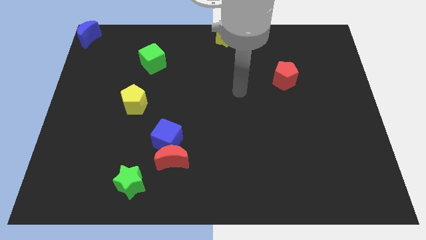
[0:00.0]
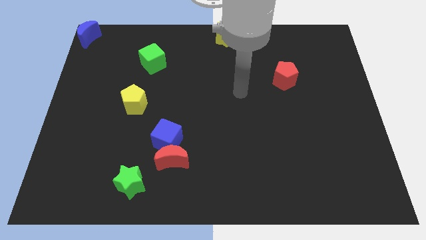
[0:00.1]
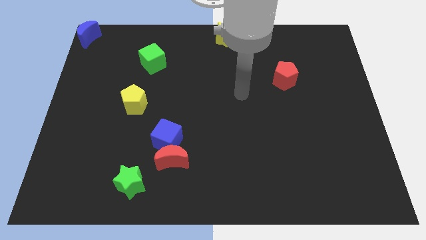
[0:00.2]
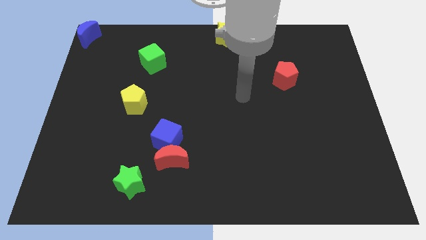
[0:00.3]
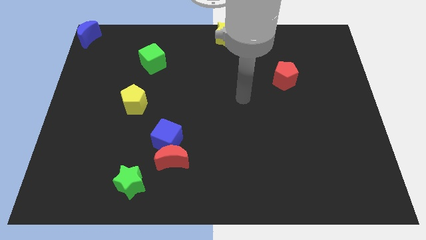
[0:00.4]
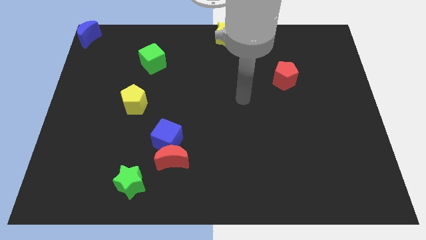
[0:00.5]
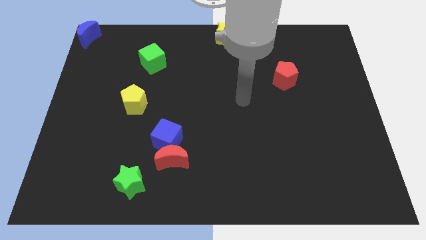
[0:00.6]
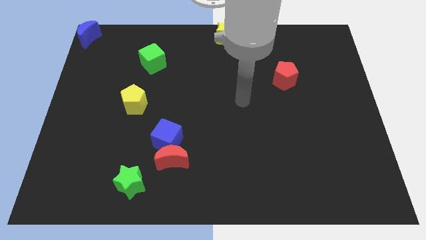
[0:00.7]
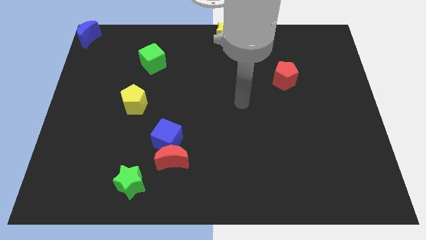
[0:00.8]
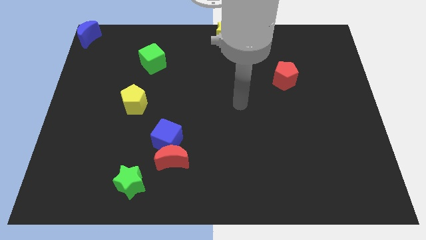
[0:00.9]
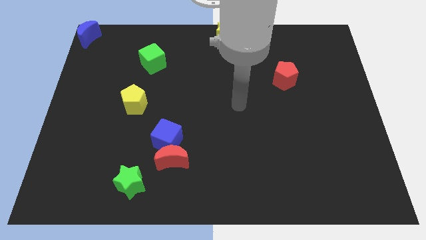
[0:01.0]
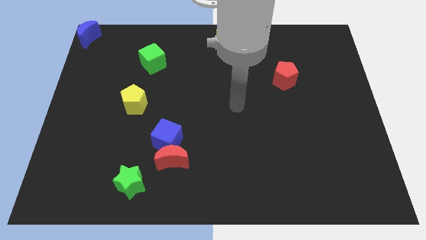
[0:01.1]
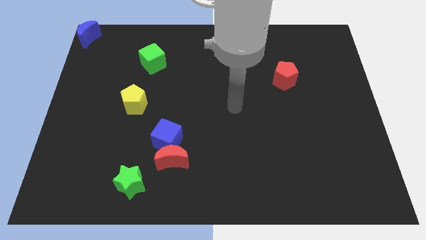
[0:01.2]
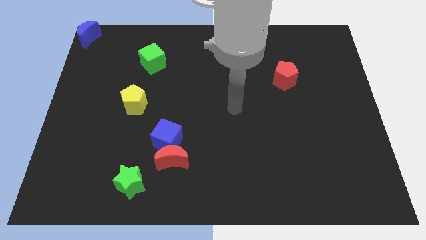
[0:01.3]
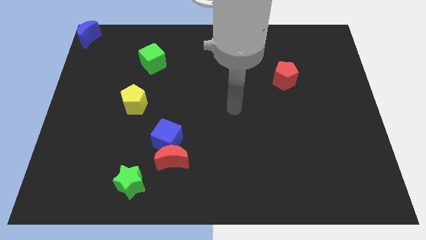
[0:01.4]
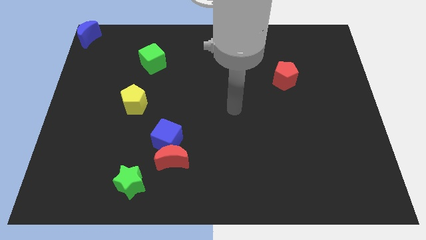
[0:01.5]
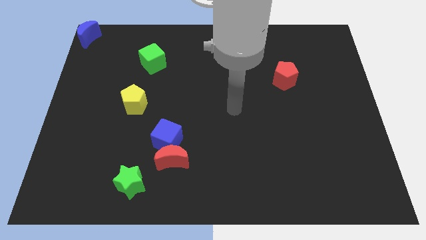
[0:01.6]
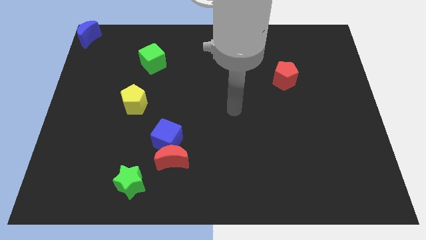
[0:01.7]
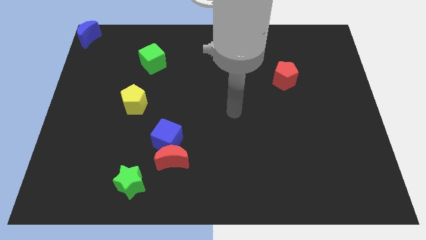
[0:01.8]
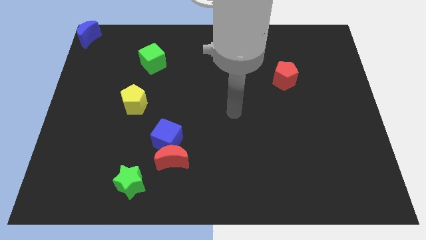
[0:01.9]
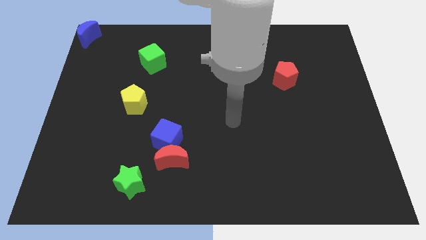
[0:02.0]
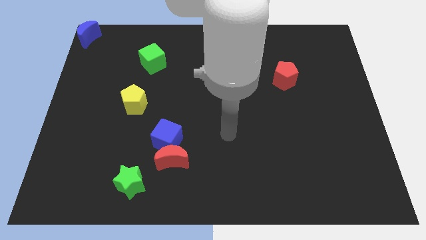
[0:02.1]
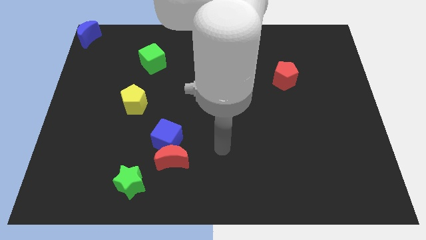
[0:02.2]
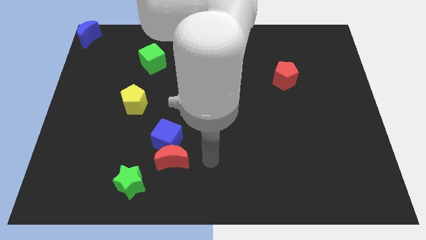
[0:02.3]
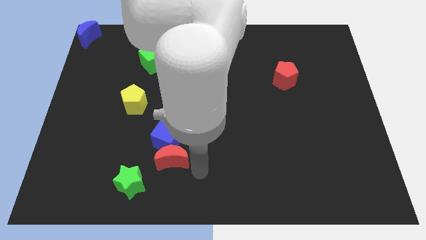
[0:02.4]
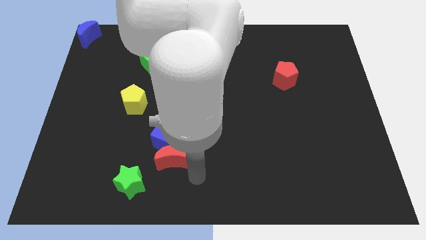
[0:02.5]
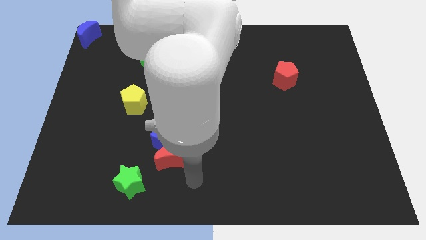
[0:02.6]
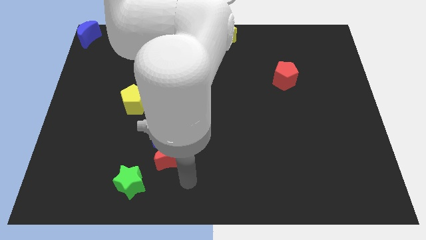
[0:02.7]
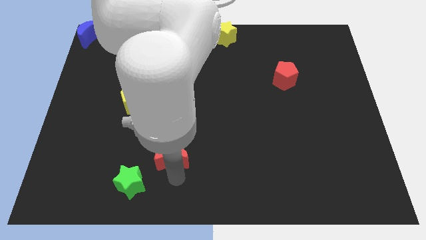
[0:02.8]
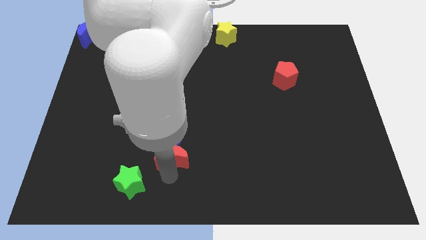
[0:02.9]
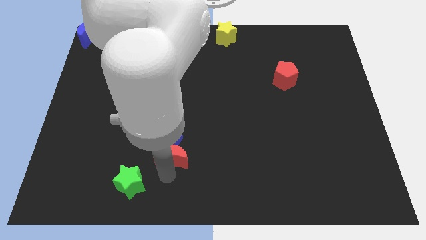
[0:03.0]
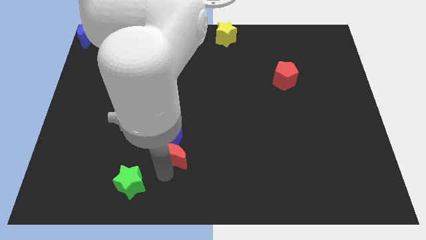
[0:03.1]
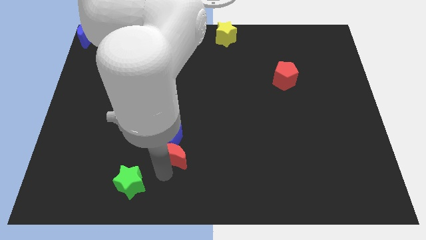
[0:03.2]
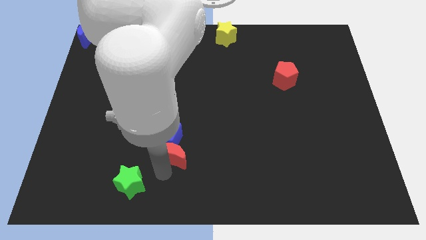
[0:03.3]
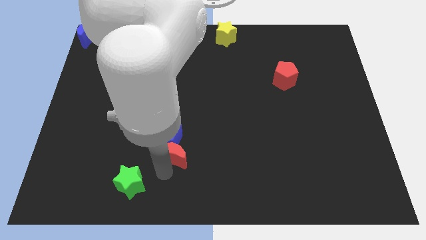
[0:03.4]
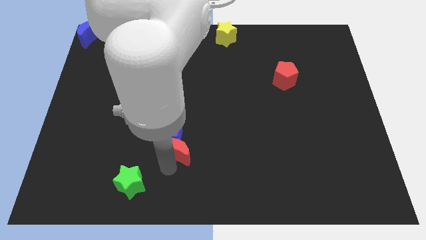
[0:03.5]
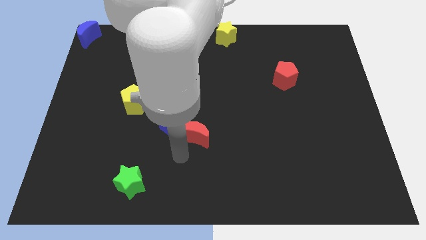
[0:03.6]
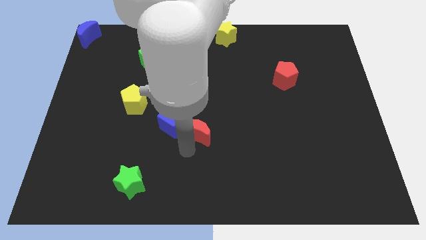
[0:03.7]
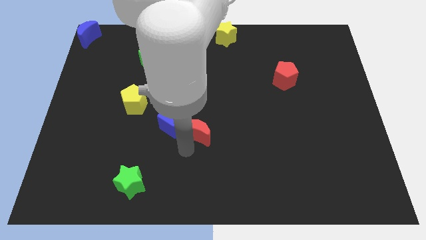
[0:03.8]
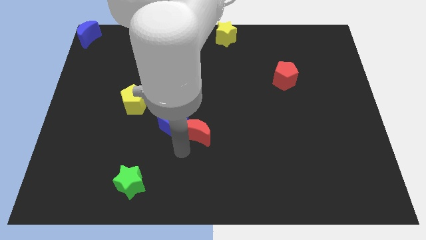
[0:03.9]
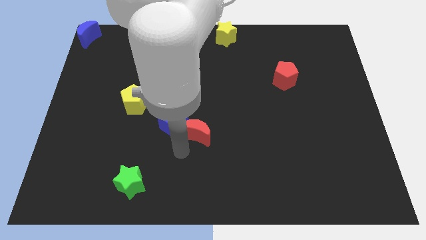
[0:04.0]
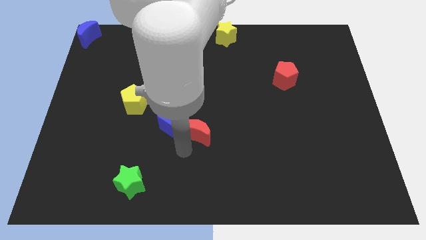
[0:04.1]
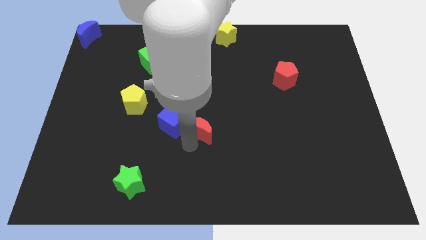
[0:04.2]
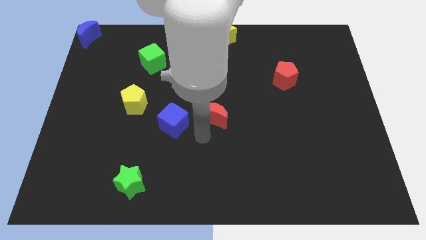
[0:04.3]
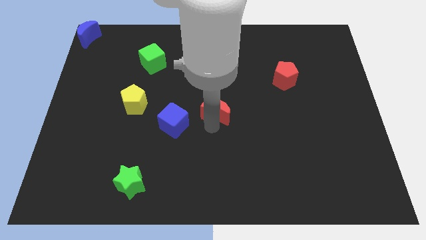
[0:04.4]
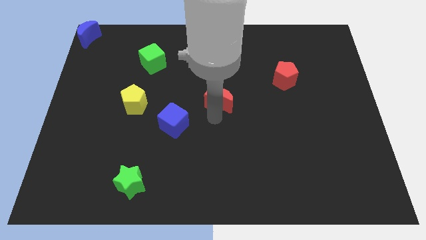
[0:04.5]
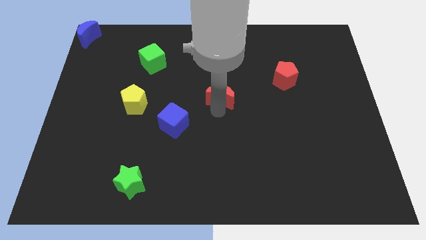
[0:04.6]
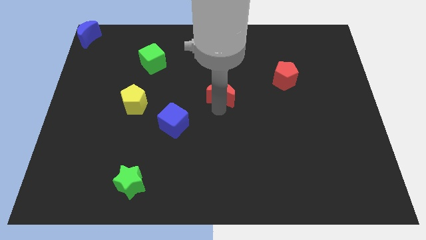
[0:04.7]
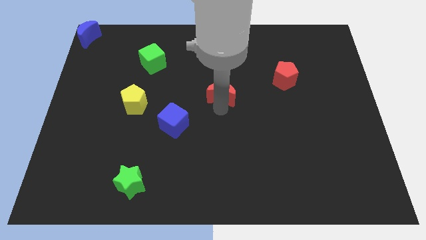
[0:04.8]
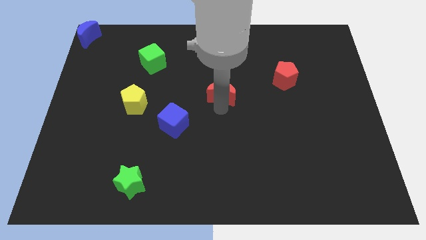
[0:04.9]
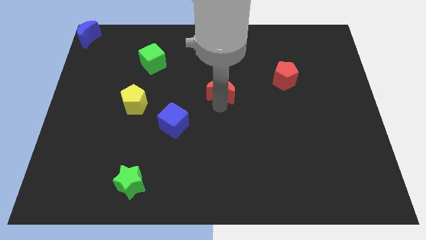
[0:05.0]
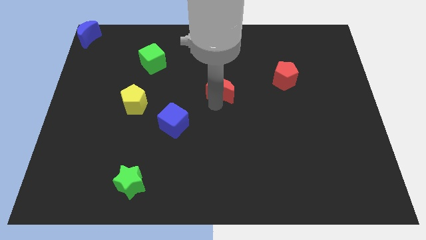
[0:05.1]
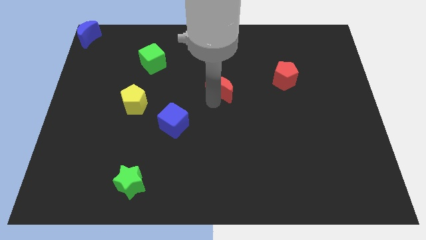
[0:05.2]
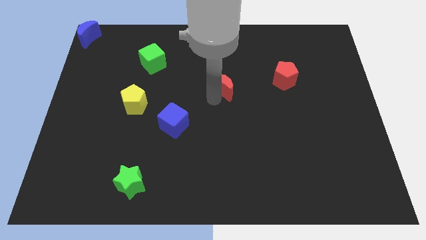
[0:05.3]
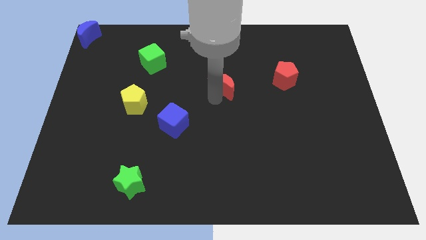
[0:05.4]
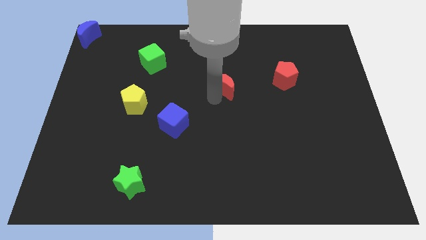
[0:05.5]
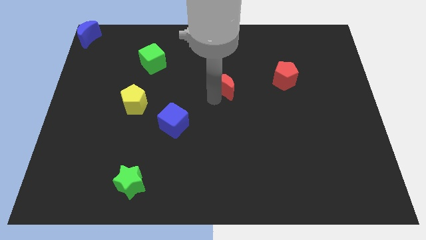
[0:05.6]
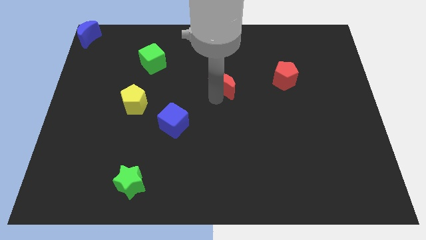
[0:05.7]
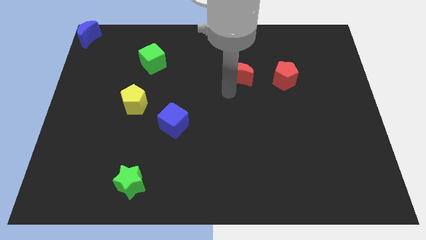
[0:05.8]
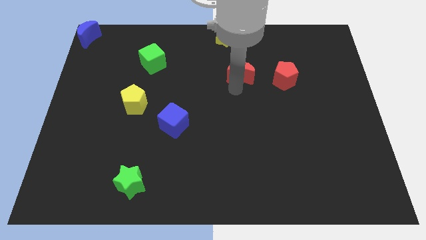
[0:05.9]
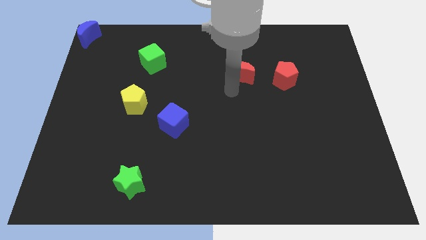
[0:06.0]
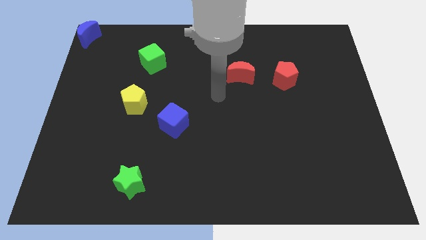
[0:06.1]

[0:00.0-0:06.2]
move the red moon towards the left of the red pentagon

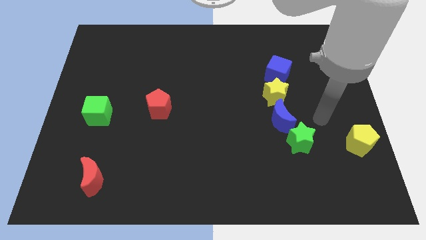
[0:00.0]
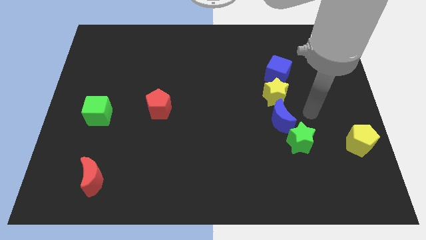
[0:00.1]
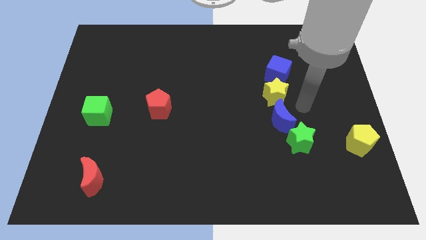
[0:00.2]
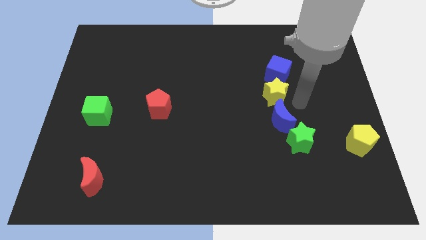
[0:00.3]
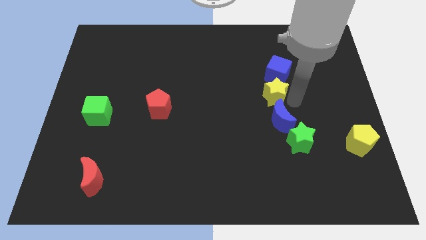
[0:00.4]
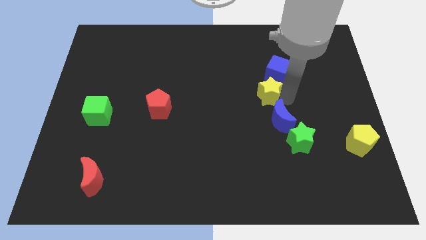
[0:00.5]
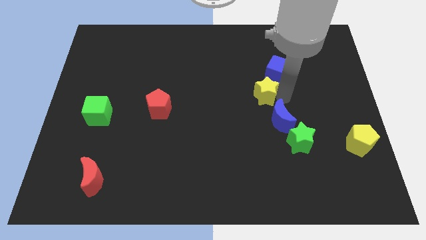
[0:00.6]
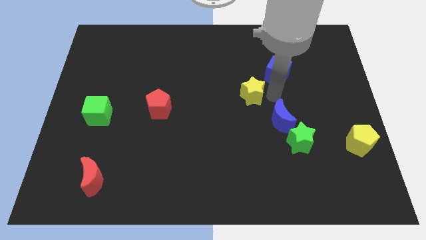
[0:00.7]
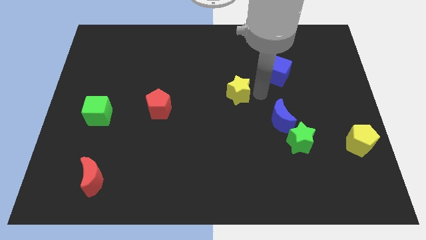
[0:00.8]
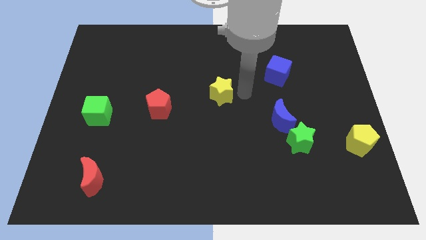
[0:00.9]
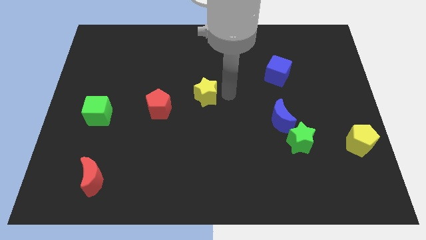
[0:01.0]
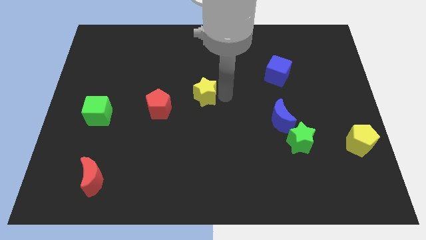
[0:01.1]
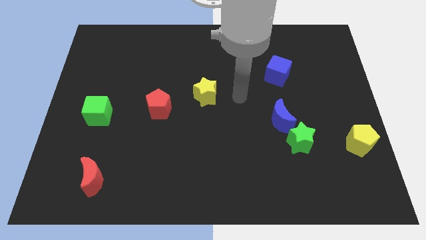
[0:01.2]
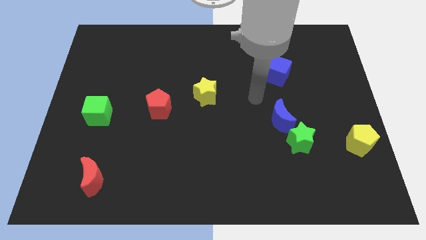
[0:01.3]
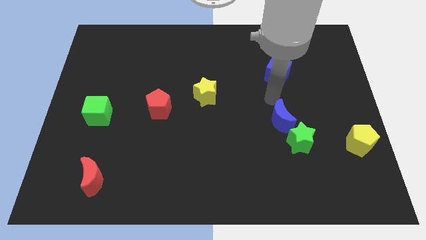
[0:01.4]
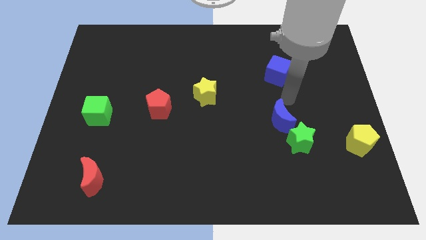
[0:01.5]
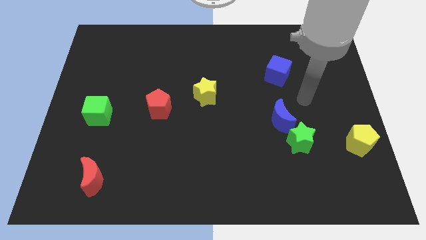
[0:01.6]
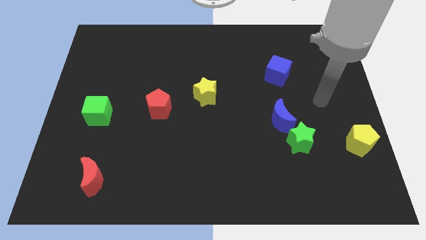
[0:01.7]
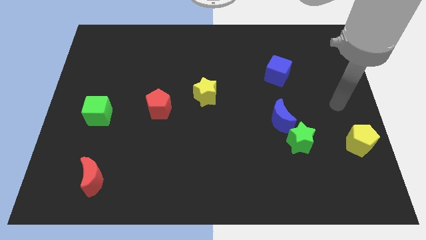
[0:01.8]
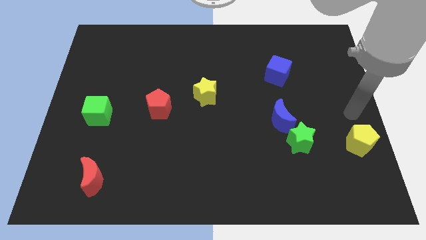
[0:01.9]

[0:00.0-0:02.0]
place the yellow star right to the red pentagon

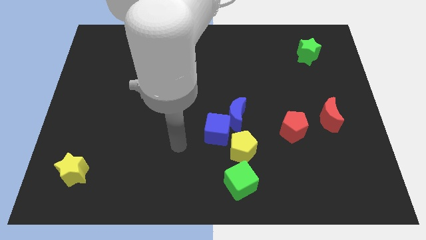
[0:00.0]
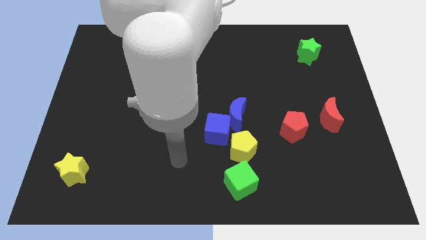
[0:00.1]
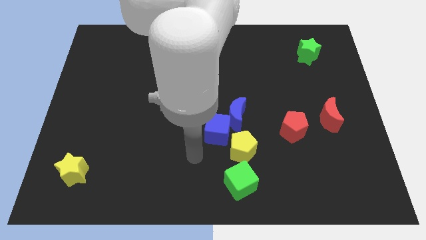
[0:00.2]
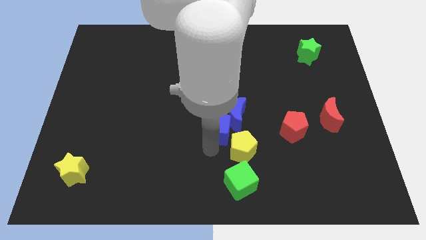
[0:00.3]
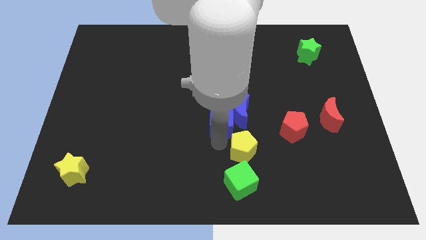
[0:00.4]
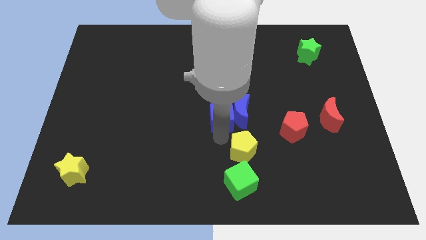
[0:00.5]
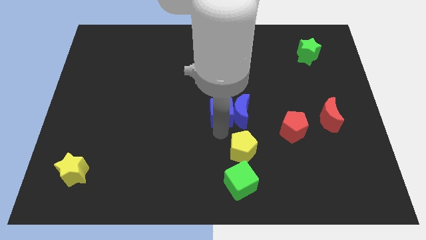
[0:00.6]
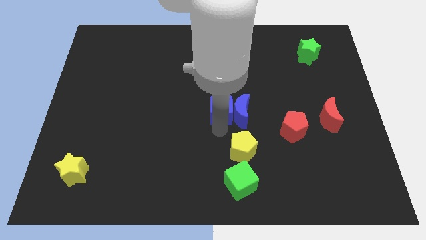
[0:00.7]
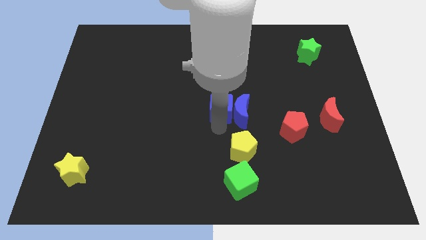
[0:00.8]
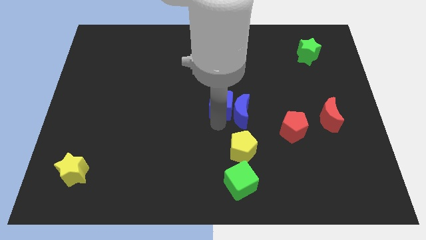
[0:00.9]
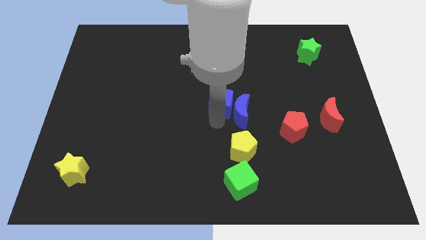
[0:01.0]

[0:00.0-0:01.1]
place the blue cube to the left of the blue moon
